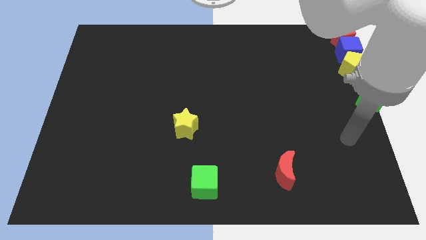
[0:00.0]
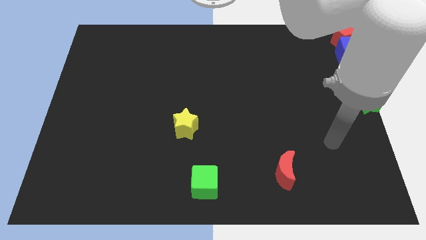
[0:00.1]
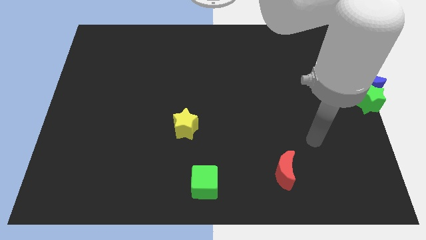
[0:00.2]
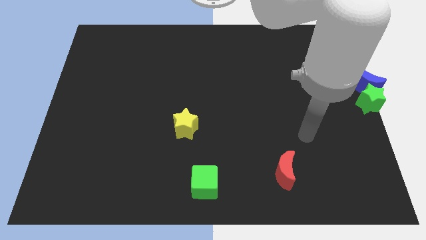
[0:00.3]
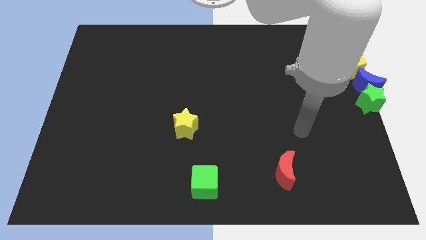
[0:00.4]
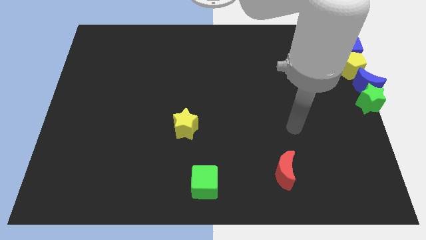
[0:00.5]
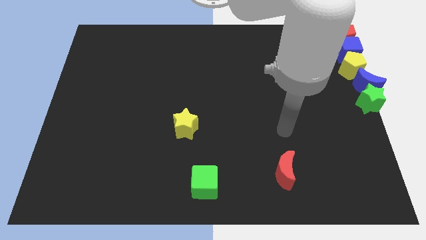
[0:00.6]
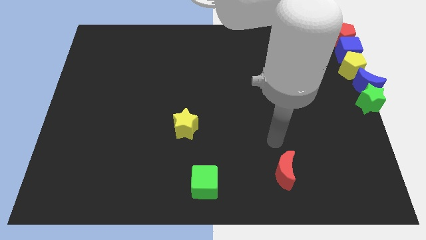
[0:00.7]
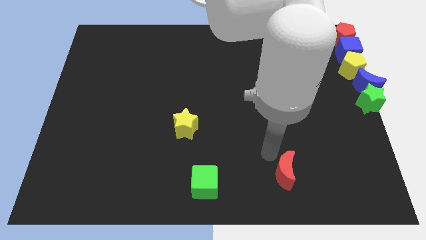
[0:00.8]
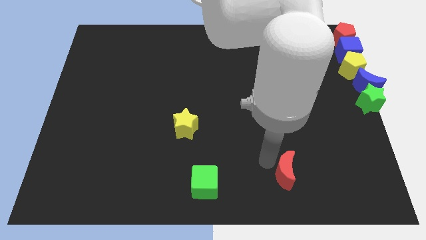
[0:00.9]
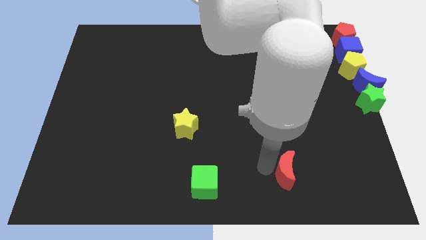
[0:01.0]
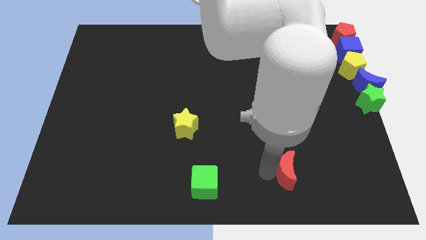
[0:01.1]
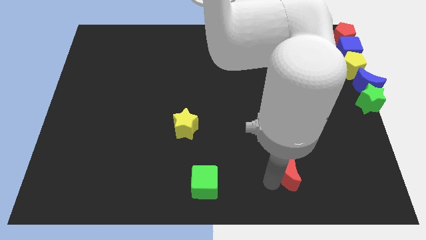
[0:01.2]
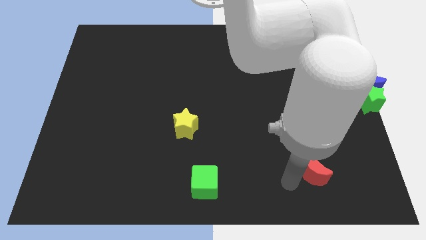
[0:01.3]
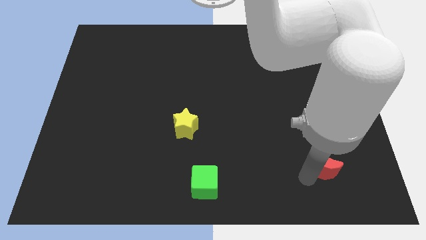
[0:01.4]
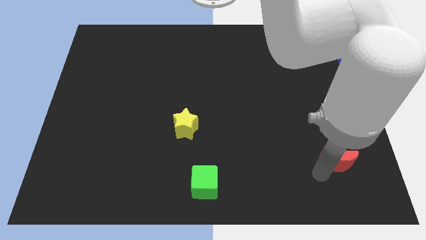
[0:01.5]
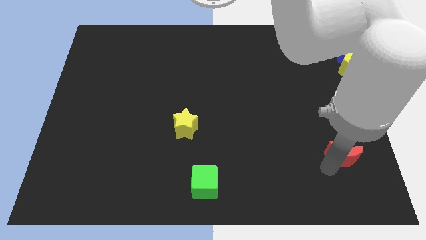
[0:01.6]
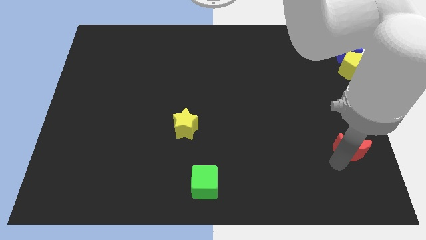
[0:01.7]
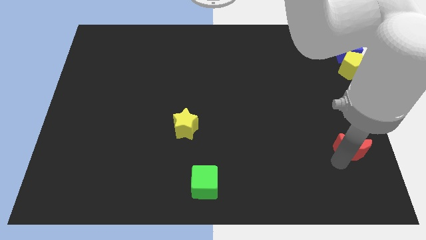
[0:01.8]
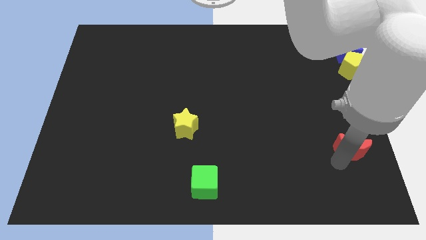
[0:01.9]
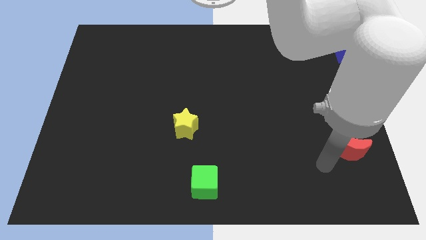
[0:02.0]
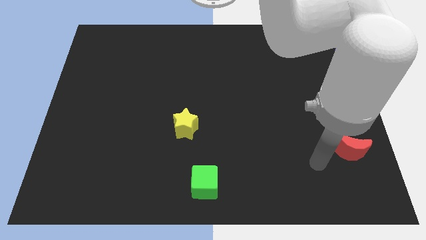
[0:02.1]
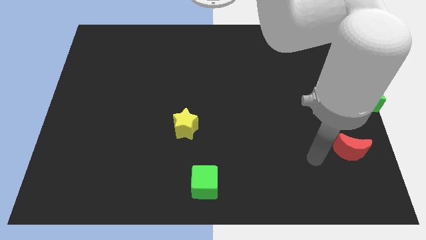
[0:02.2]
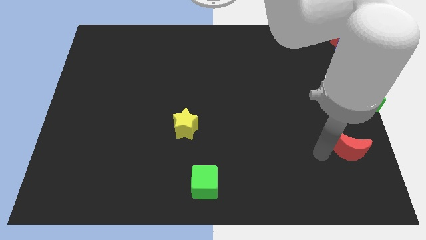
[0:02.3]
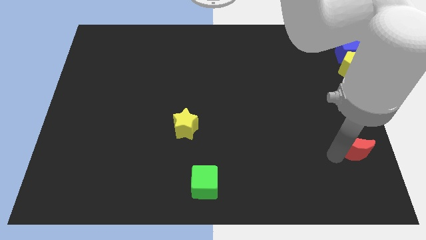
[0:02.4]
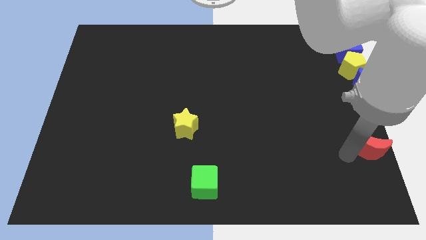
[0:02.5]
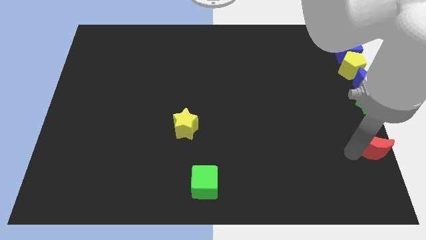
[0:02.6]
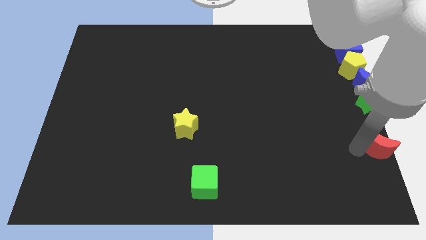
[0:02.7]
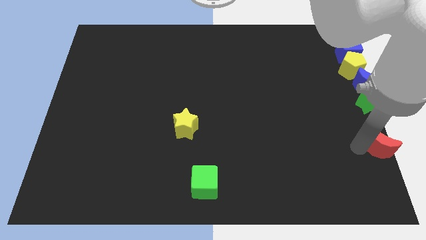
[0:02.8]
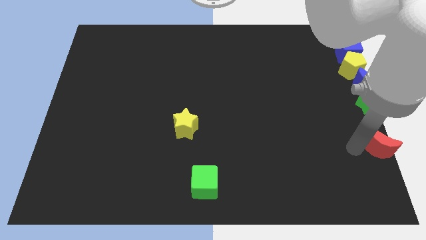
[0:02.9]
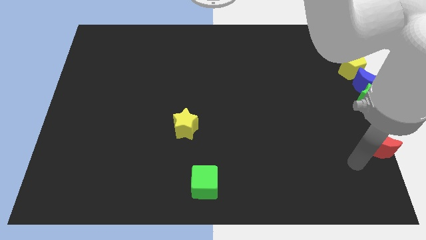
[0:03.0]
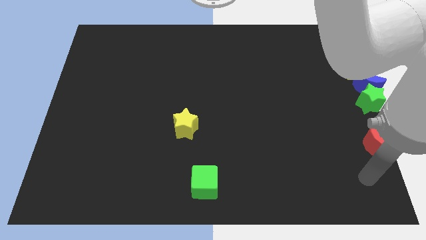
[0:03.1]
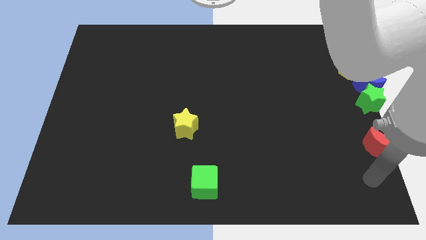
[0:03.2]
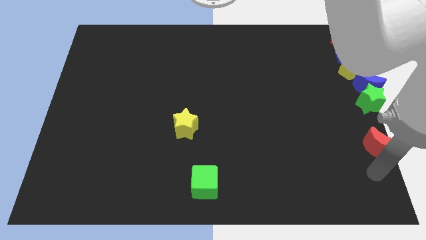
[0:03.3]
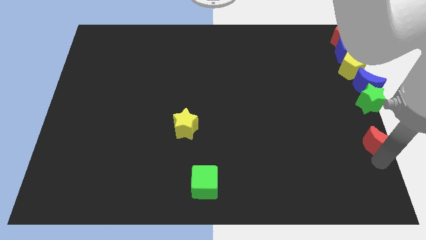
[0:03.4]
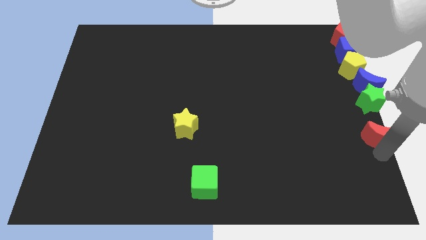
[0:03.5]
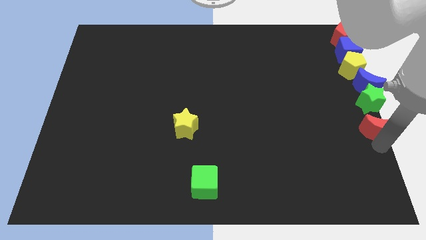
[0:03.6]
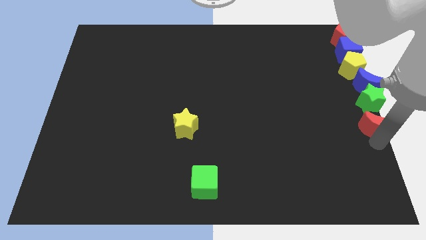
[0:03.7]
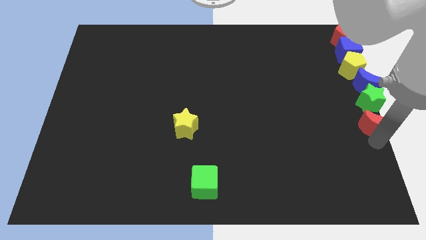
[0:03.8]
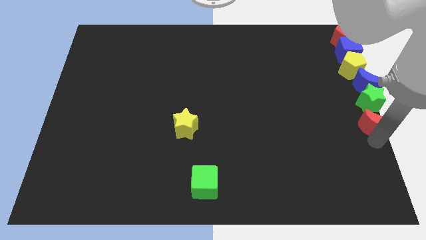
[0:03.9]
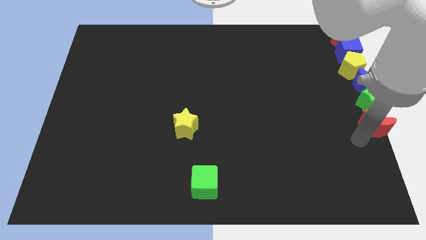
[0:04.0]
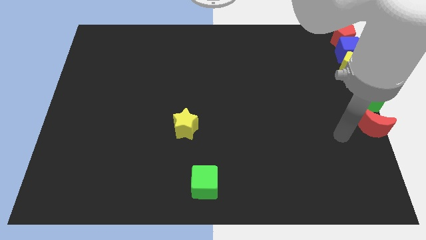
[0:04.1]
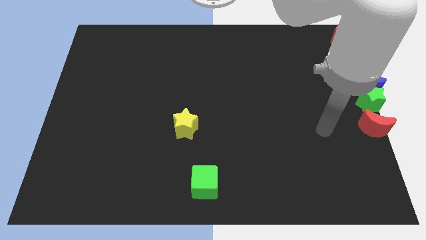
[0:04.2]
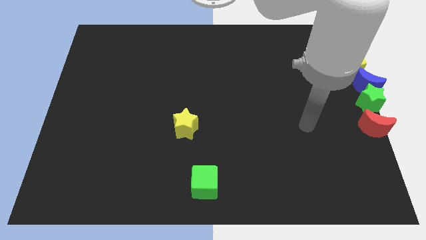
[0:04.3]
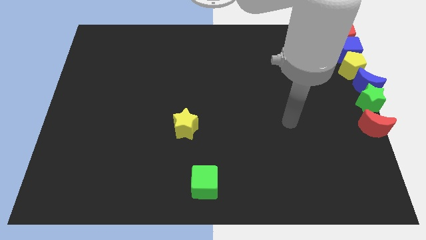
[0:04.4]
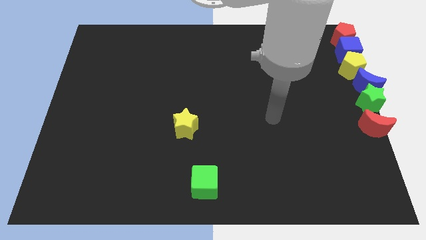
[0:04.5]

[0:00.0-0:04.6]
push the red moon below the green star

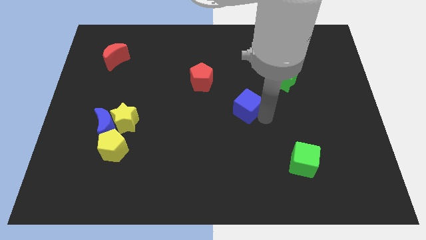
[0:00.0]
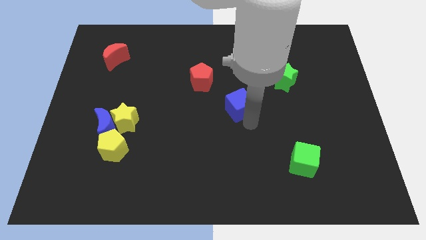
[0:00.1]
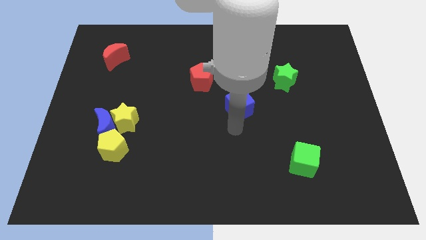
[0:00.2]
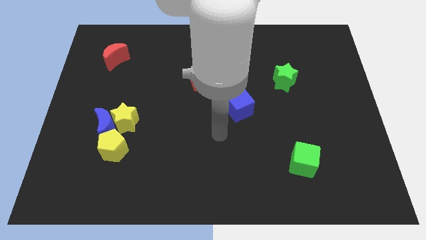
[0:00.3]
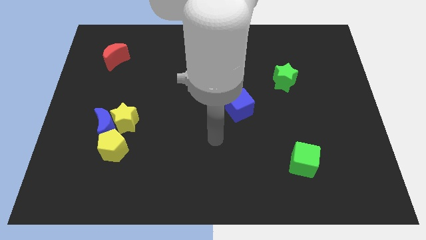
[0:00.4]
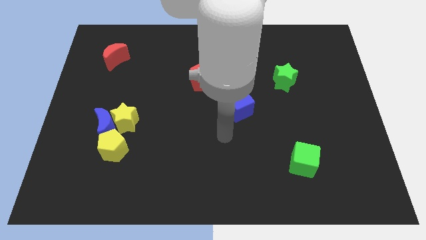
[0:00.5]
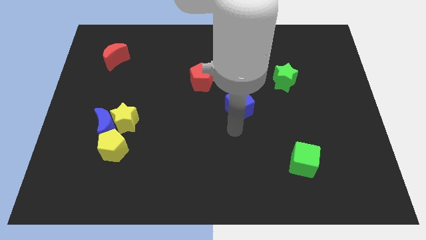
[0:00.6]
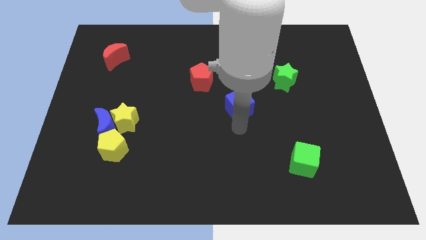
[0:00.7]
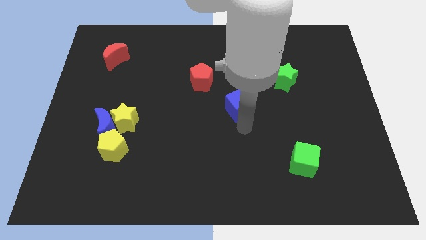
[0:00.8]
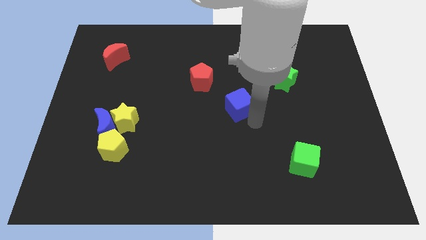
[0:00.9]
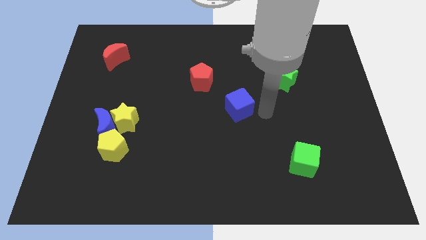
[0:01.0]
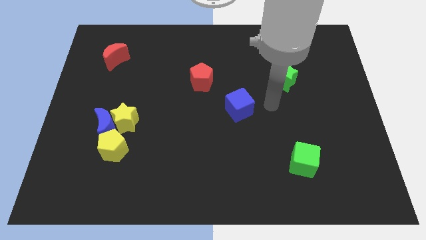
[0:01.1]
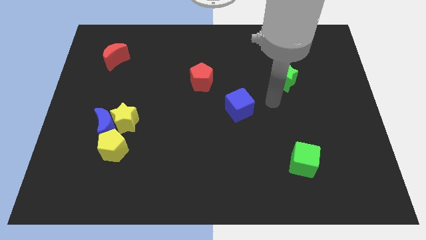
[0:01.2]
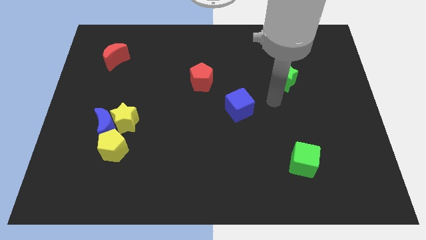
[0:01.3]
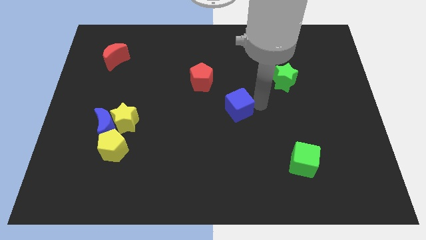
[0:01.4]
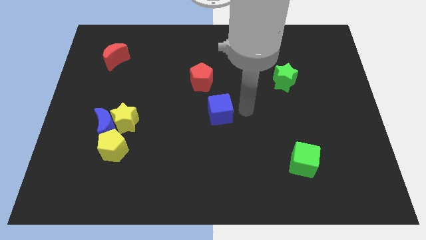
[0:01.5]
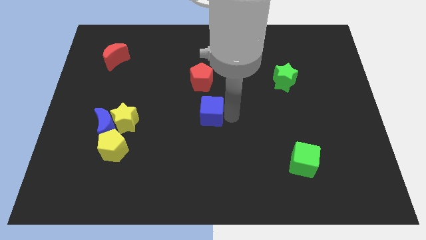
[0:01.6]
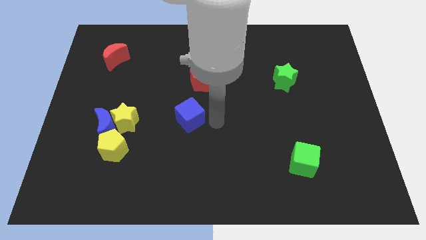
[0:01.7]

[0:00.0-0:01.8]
place blue cube to the bottom of red pentagon

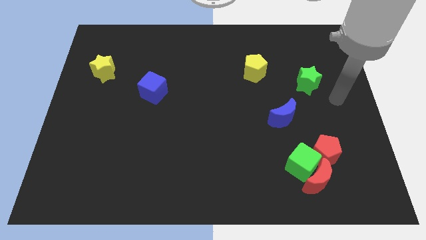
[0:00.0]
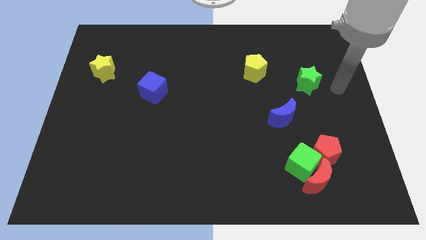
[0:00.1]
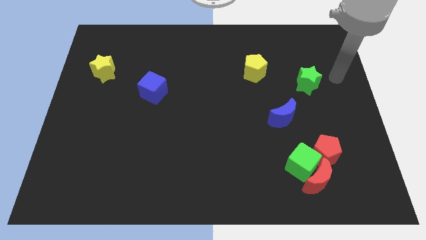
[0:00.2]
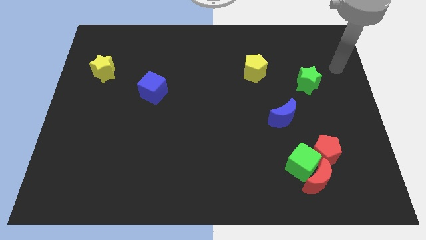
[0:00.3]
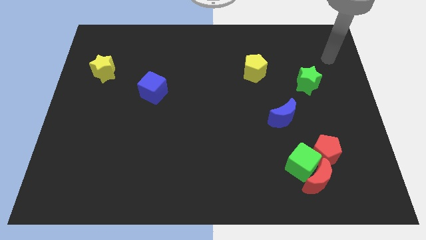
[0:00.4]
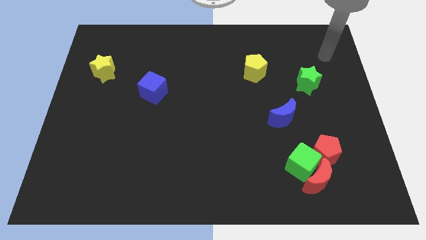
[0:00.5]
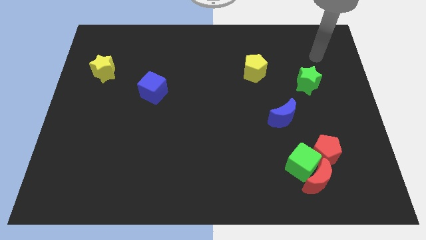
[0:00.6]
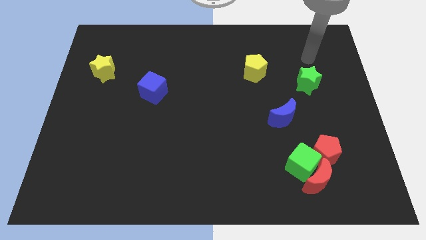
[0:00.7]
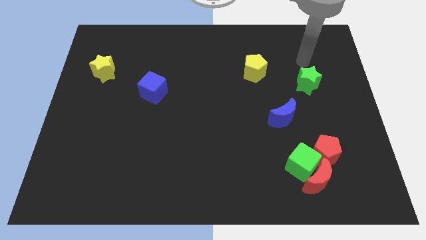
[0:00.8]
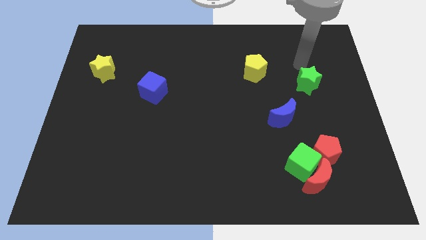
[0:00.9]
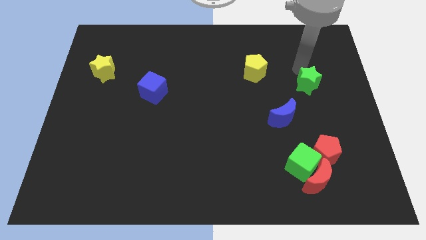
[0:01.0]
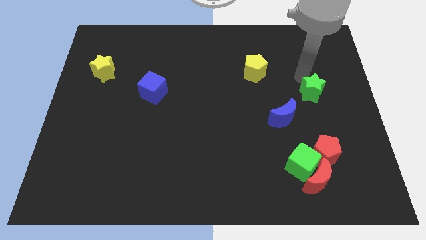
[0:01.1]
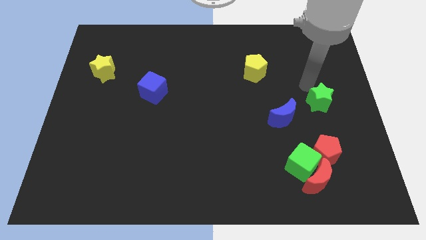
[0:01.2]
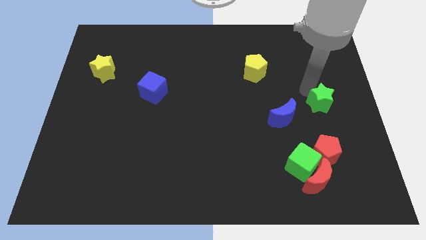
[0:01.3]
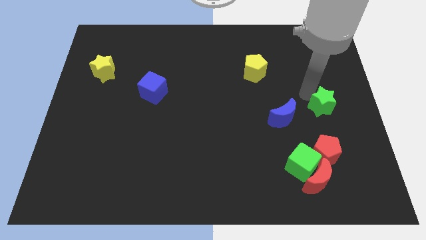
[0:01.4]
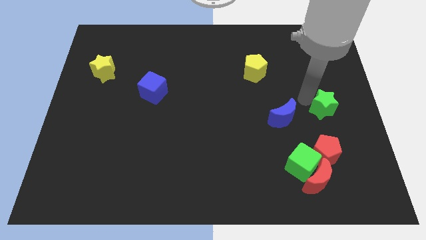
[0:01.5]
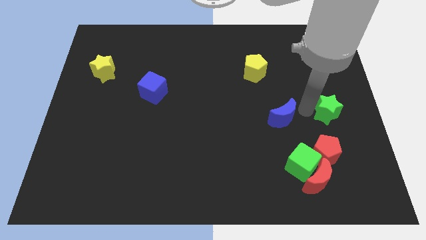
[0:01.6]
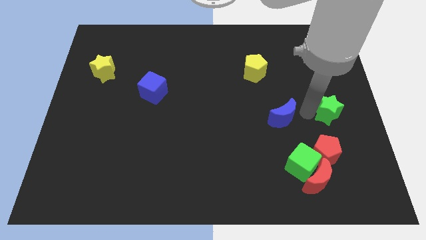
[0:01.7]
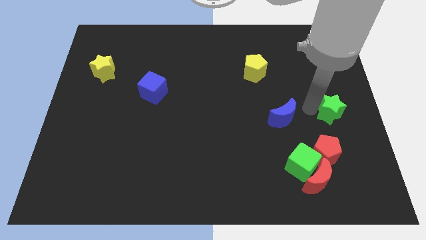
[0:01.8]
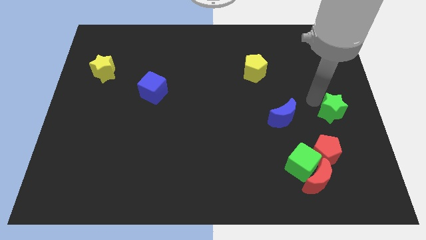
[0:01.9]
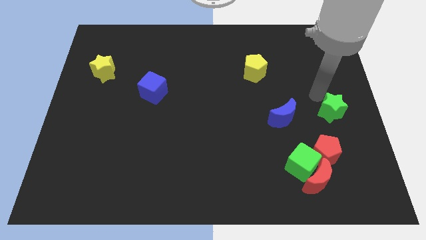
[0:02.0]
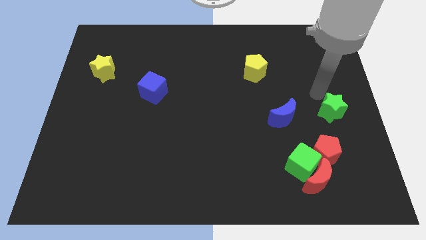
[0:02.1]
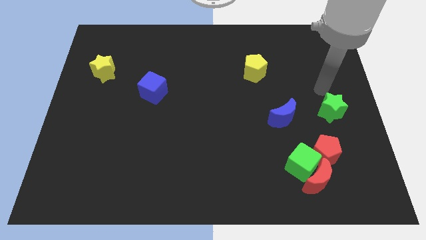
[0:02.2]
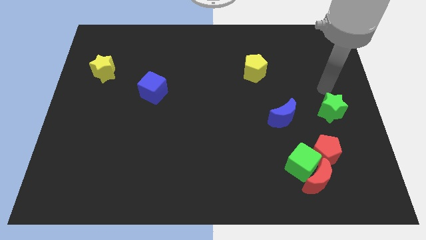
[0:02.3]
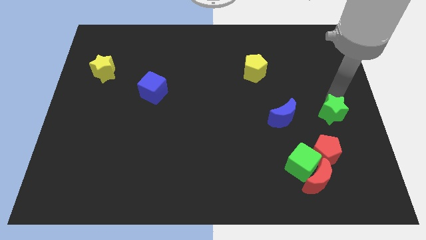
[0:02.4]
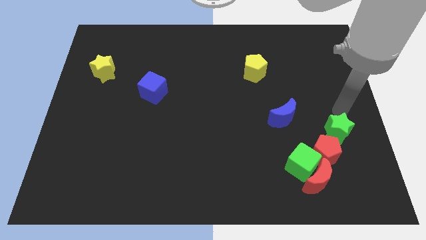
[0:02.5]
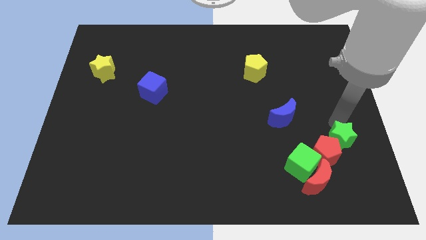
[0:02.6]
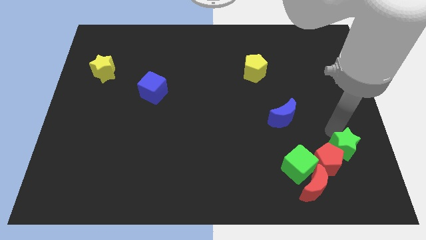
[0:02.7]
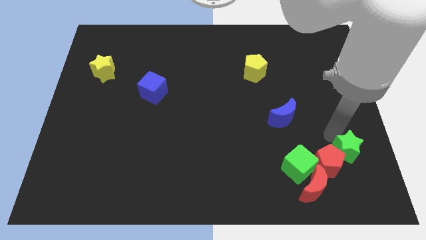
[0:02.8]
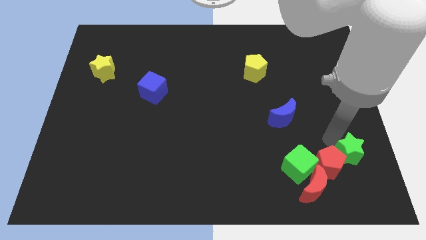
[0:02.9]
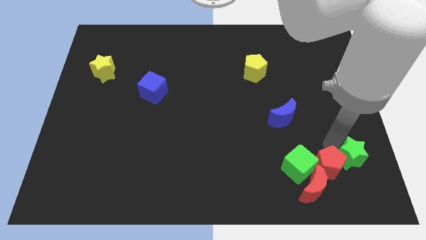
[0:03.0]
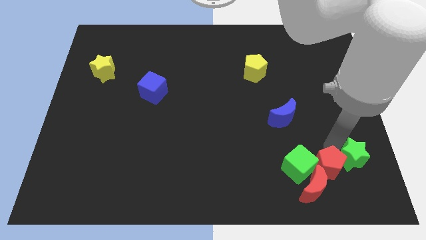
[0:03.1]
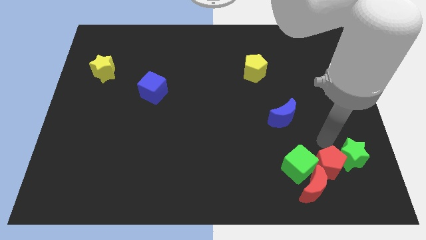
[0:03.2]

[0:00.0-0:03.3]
put the green star to the right of the red pentagon
